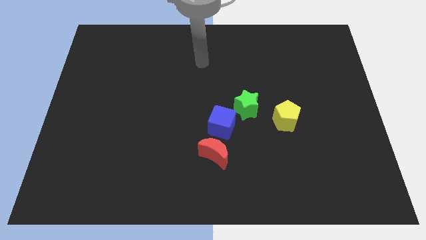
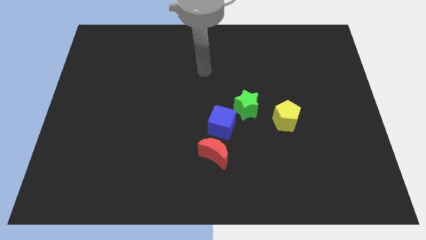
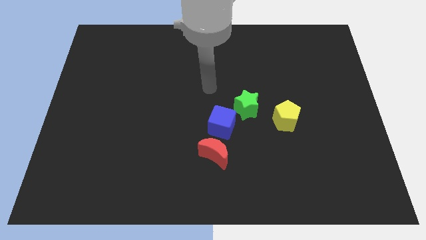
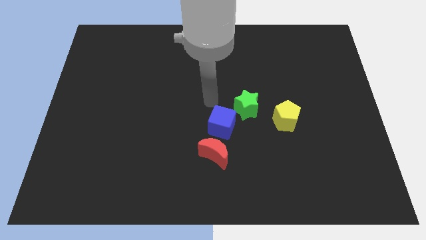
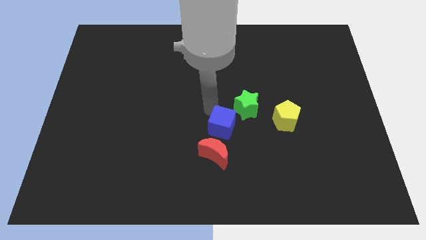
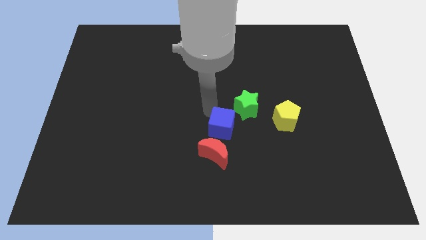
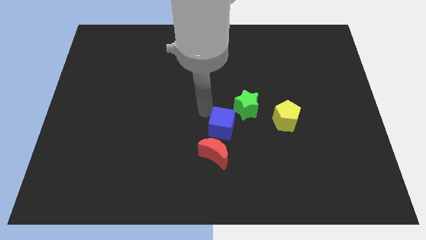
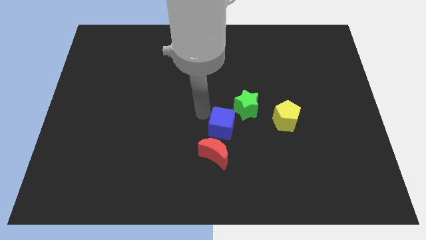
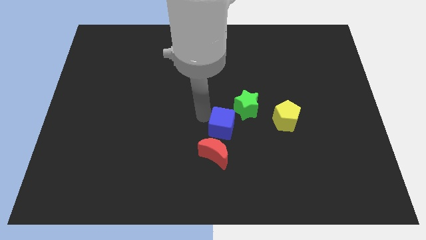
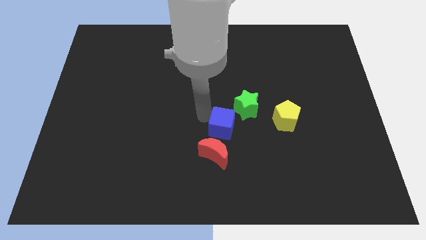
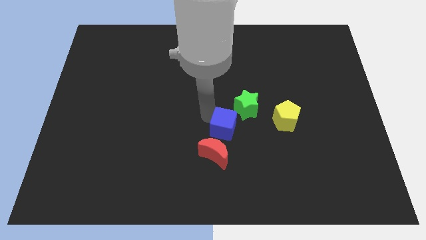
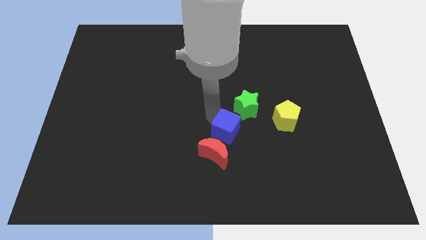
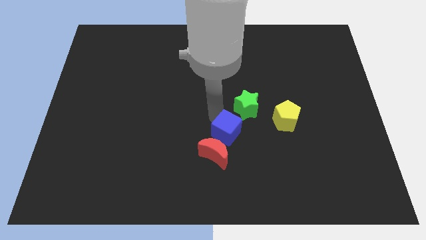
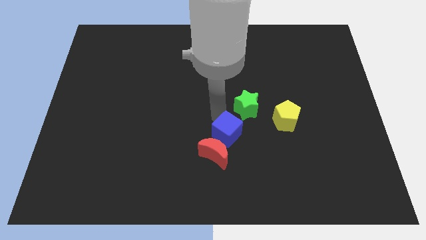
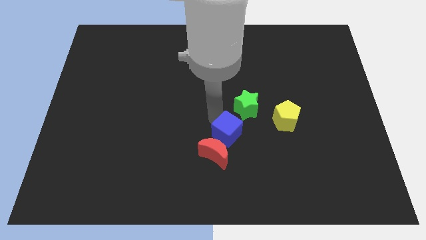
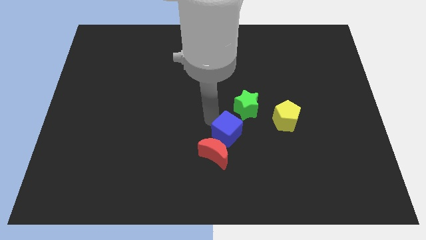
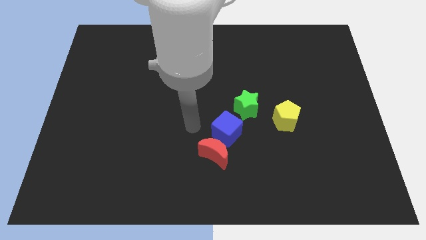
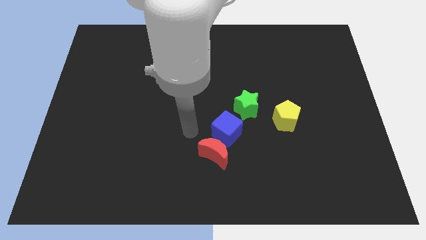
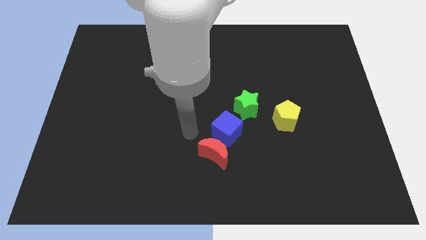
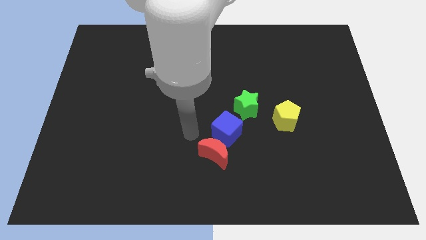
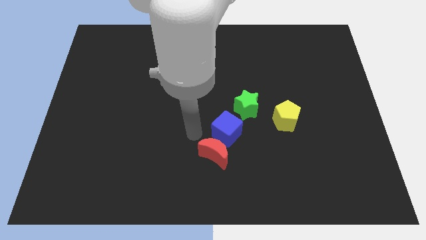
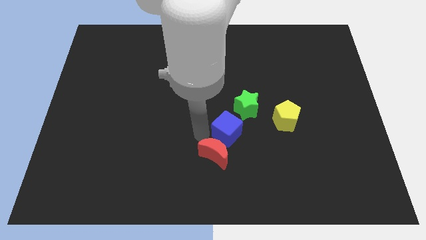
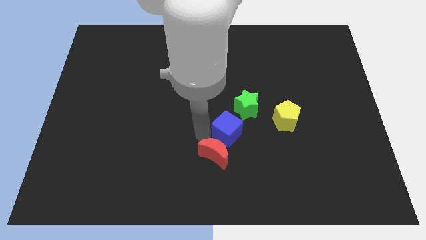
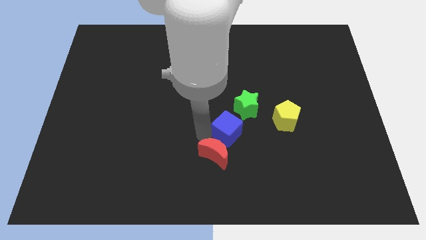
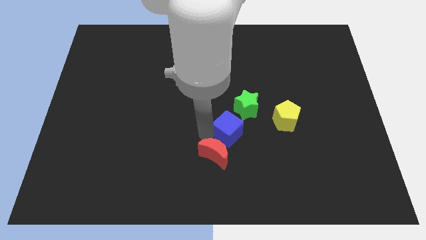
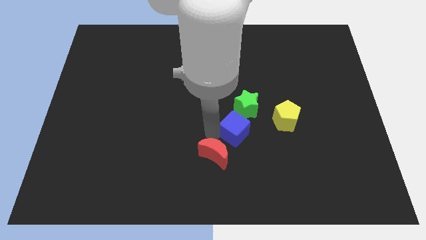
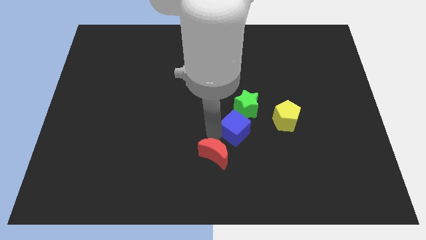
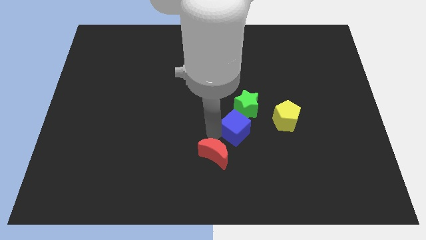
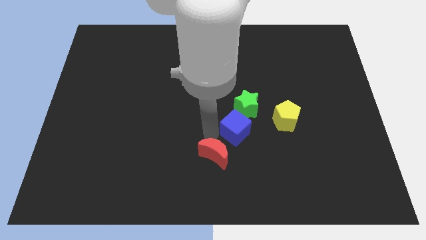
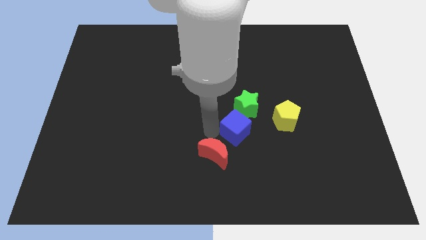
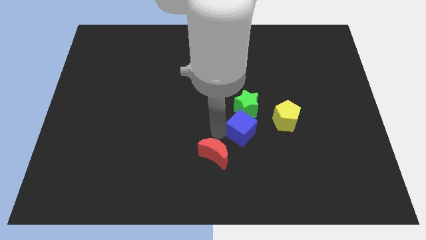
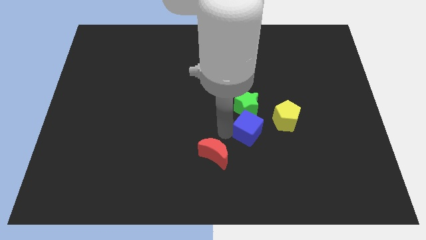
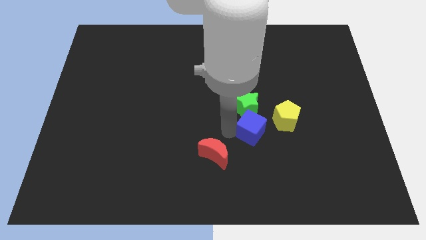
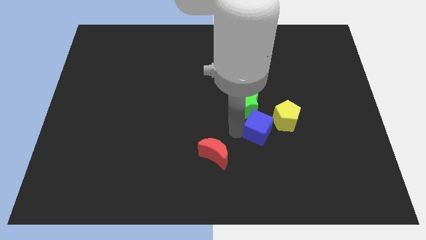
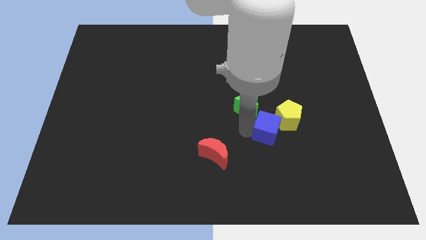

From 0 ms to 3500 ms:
push the cube close to the yellow block

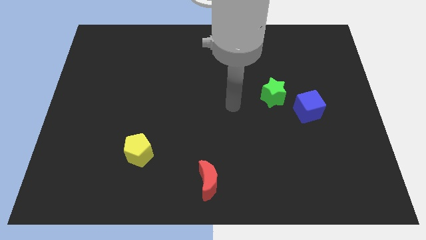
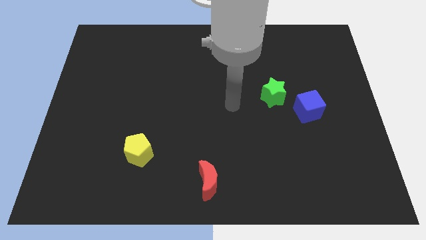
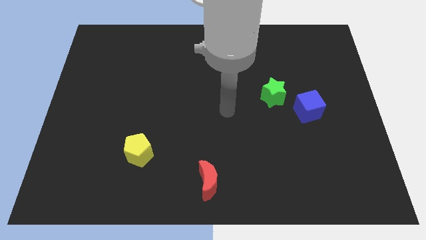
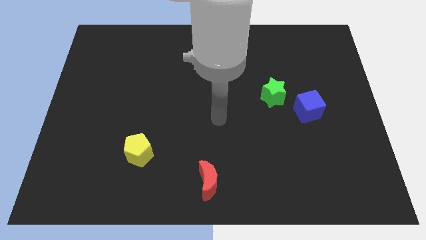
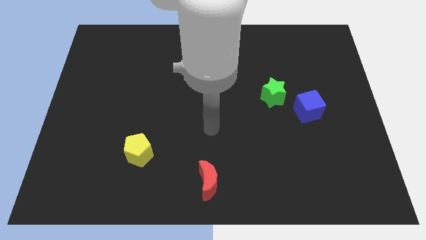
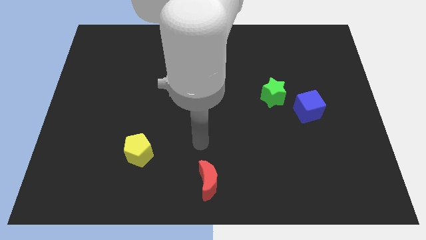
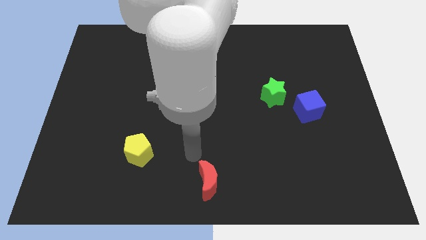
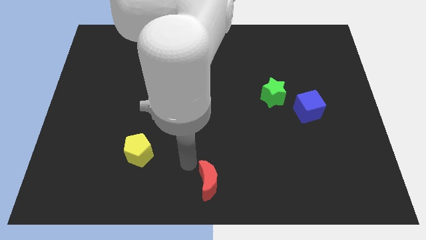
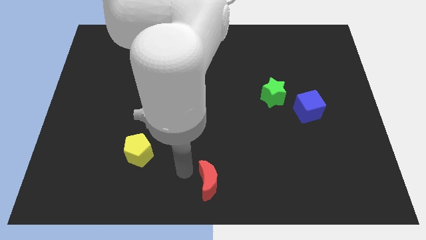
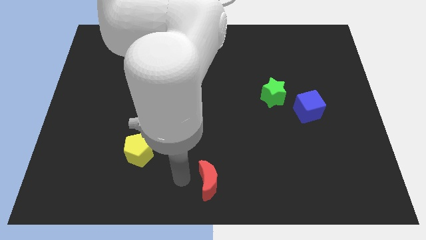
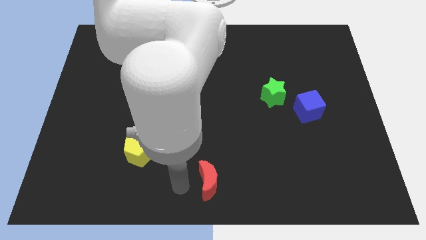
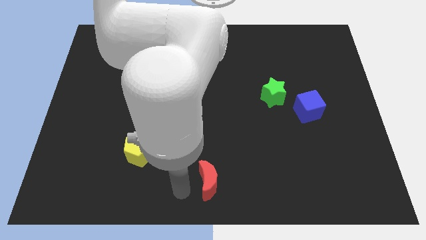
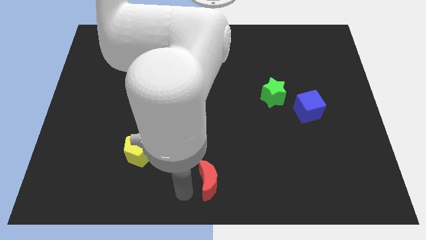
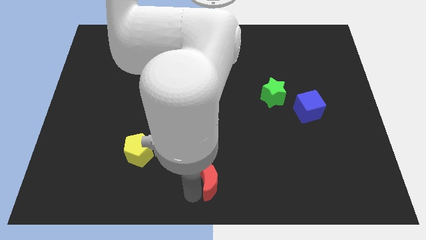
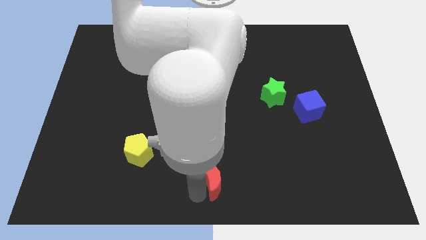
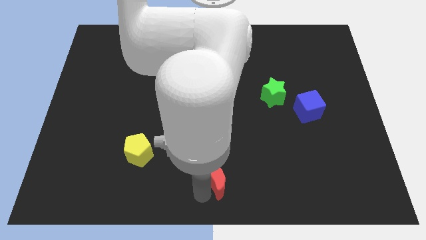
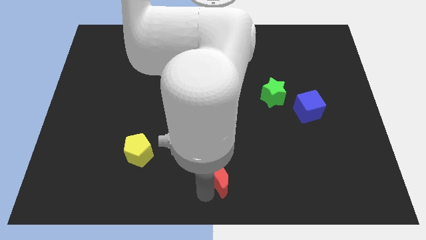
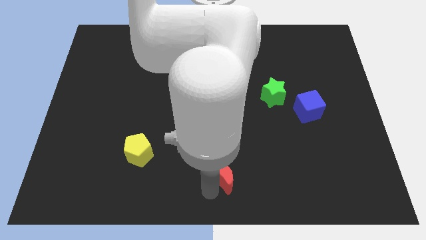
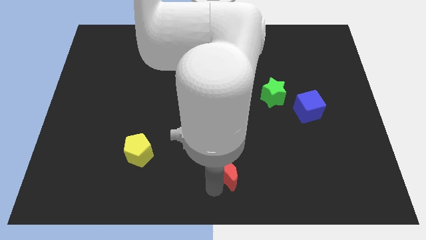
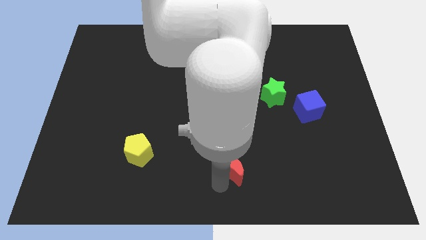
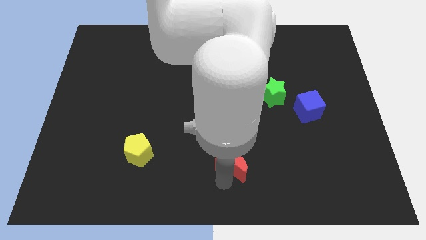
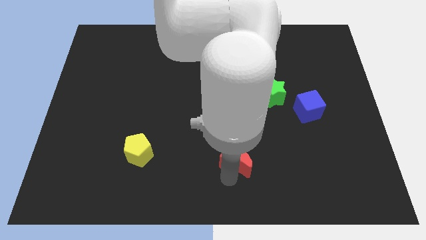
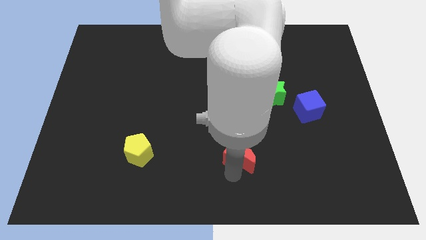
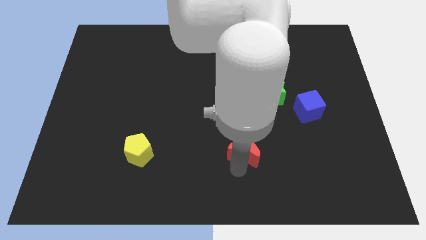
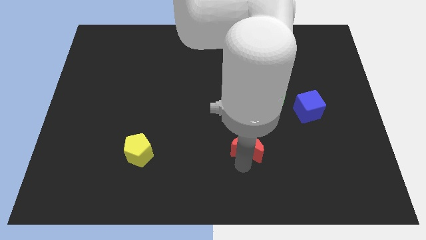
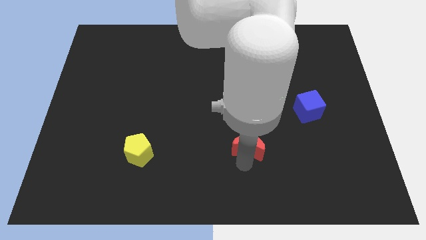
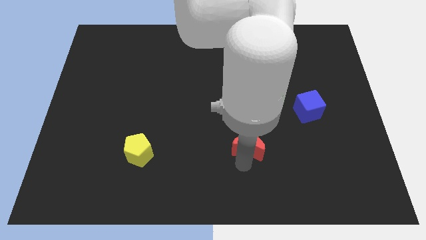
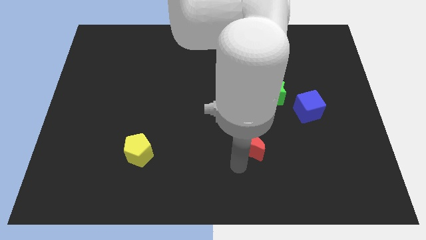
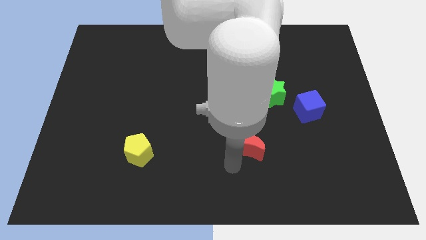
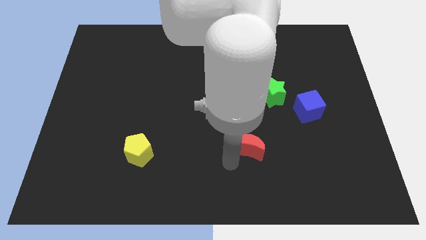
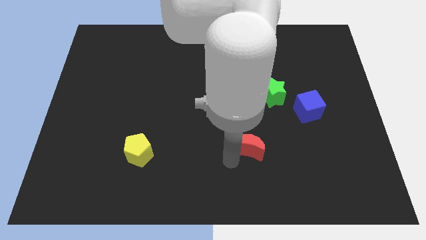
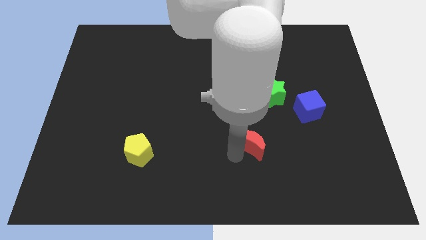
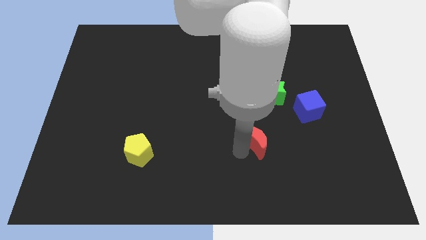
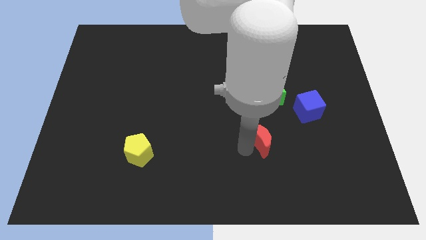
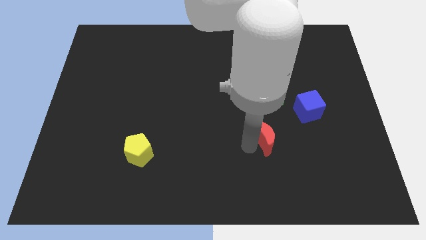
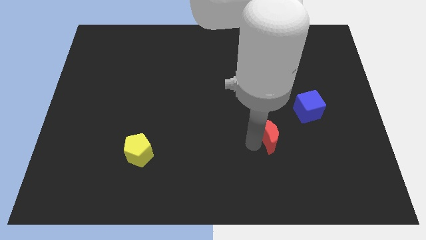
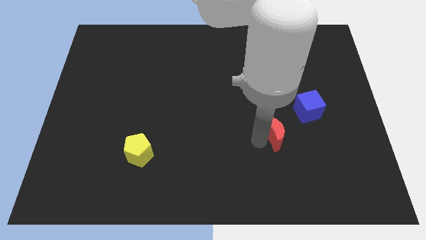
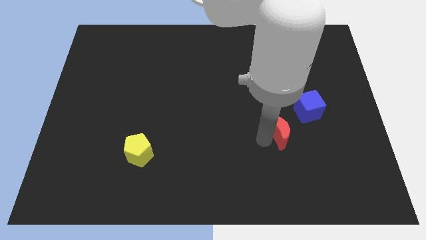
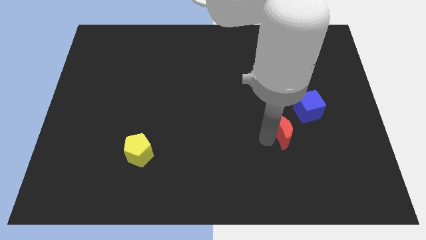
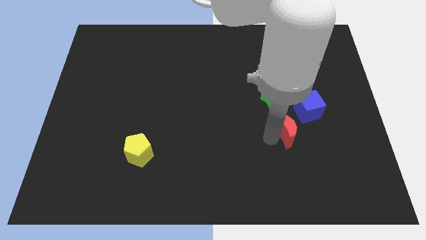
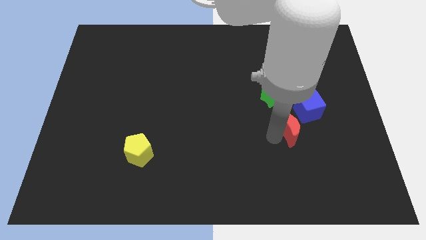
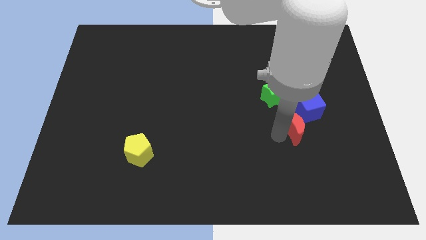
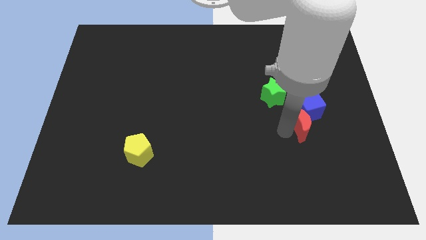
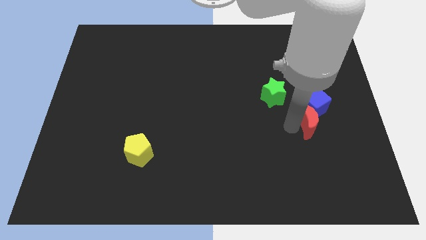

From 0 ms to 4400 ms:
slide the red moon next to the blue block

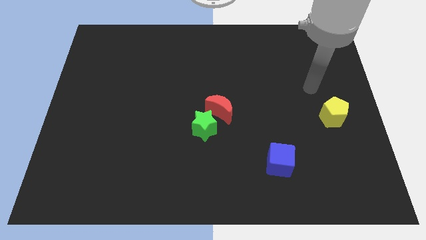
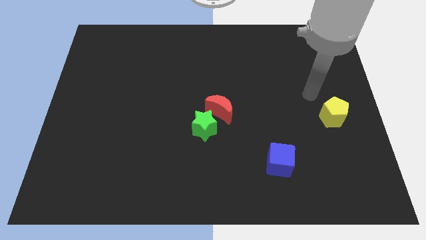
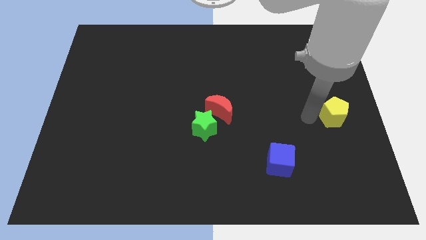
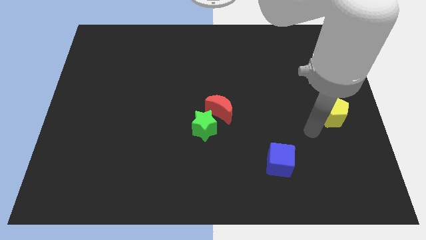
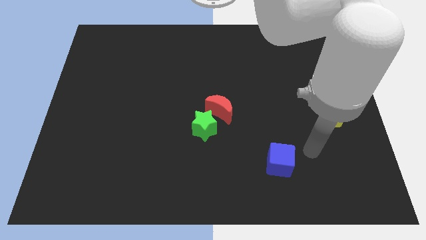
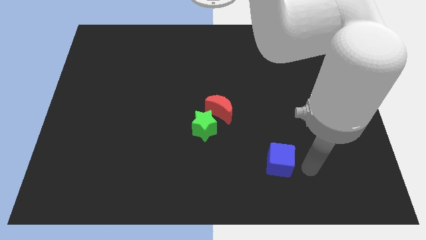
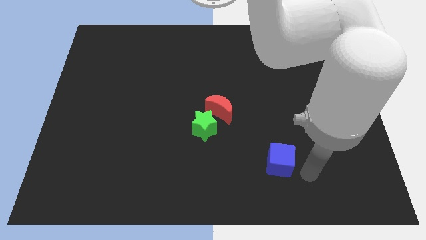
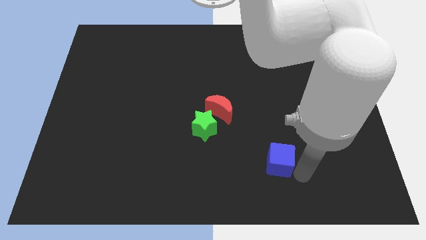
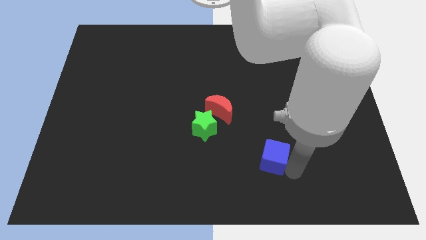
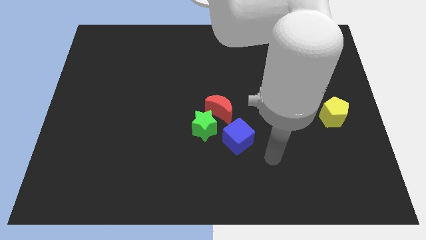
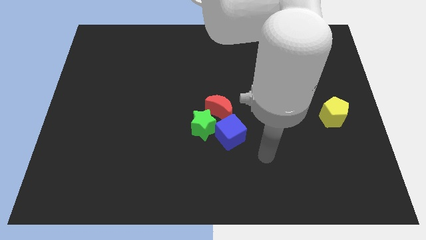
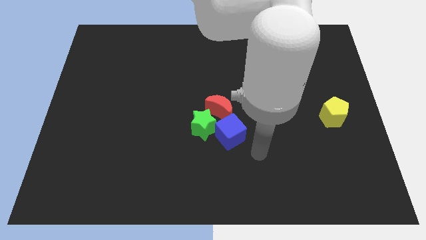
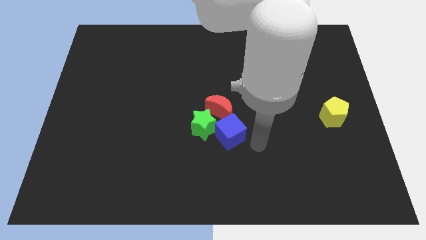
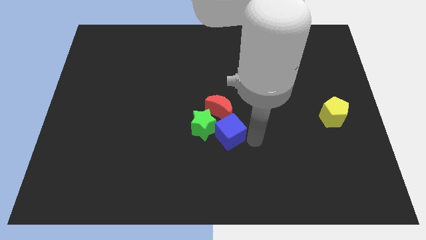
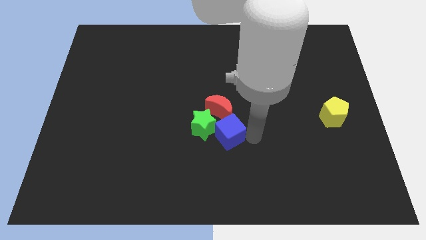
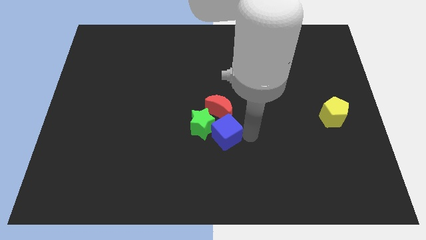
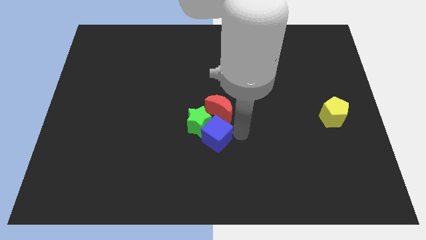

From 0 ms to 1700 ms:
move the blue block to the star
